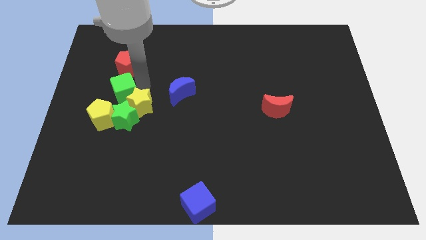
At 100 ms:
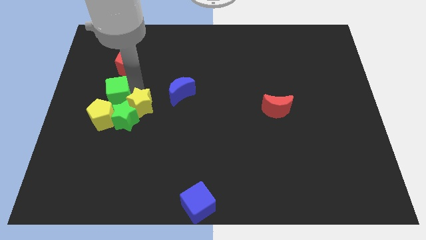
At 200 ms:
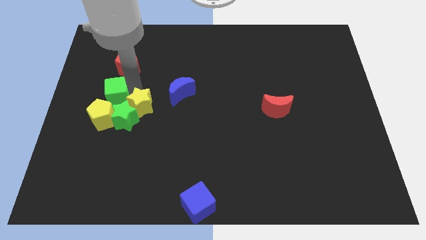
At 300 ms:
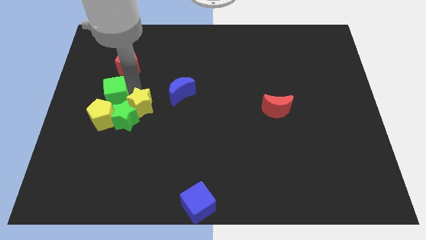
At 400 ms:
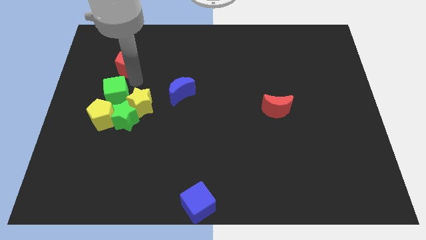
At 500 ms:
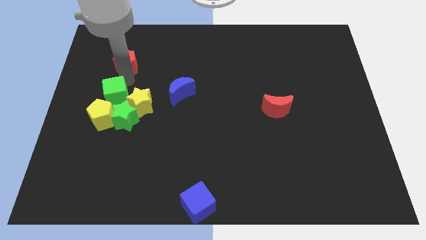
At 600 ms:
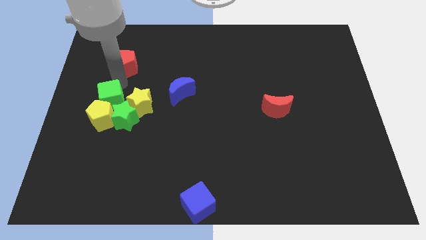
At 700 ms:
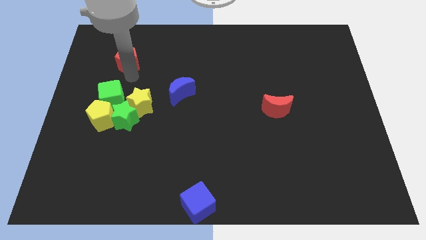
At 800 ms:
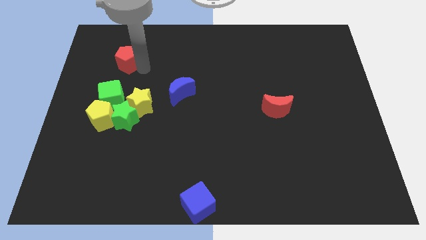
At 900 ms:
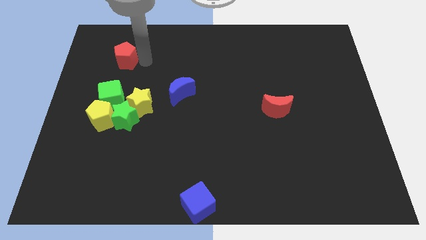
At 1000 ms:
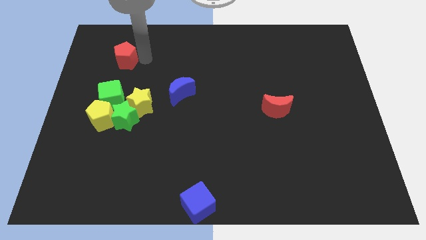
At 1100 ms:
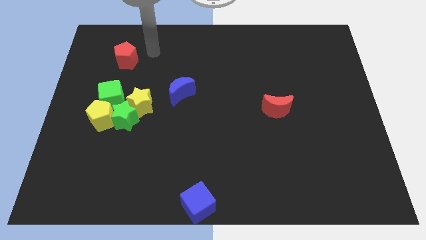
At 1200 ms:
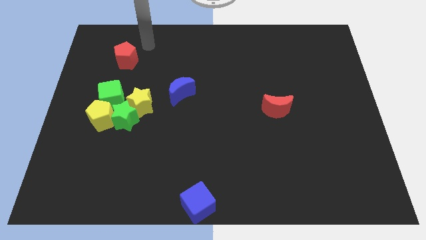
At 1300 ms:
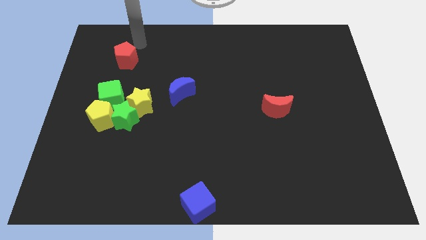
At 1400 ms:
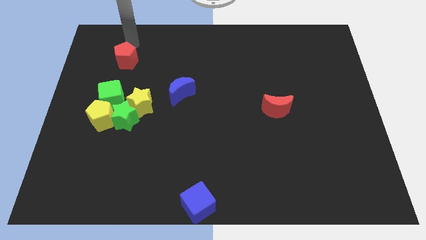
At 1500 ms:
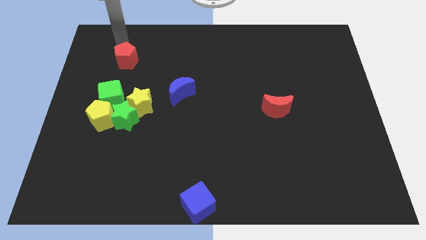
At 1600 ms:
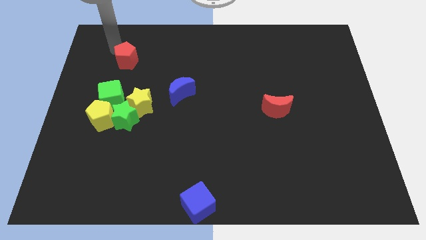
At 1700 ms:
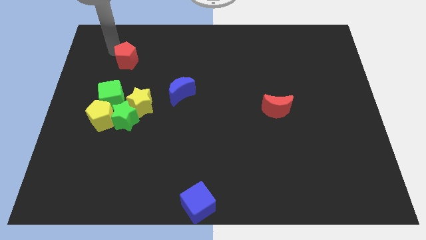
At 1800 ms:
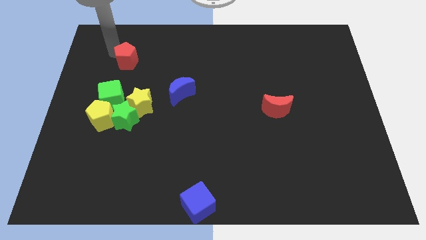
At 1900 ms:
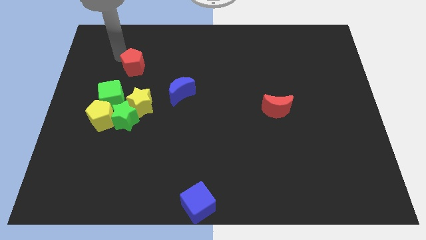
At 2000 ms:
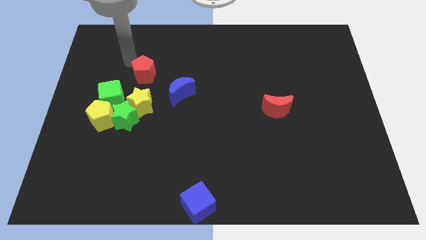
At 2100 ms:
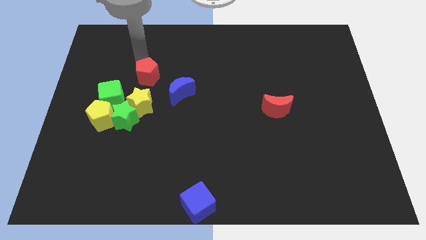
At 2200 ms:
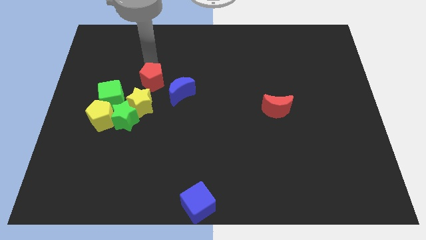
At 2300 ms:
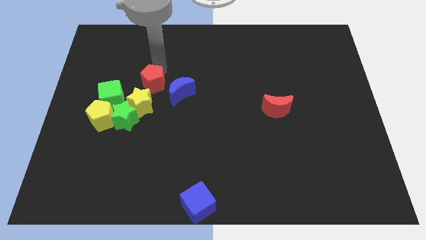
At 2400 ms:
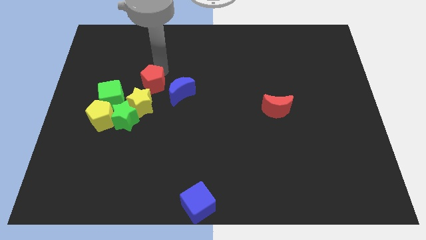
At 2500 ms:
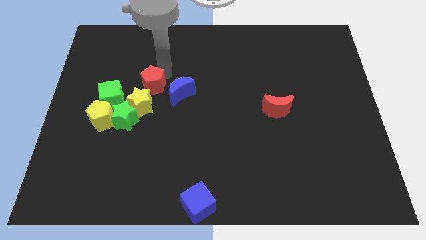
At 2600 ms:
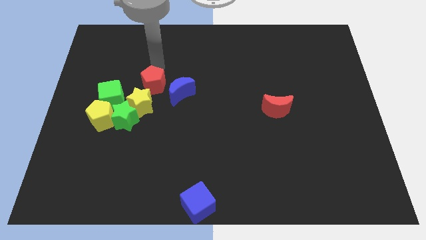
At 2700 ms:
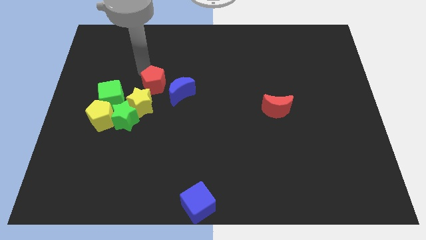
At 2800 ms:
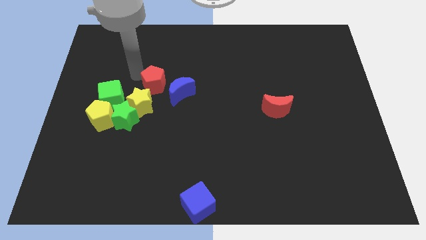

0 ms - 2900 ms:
move the red pentagon and green star towards the group of blocks

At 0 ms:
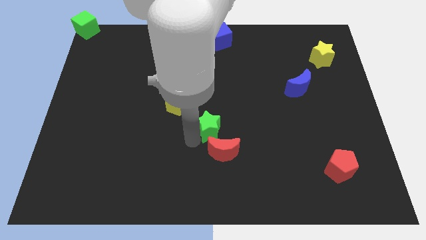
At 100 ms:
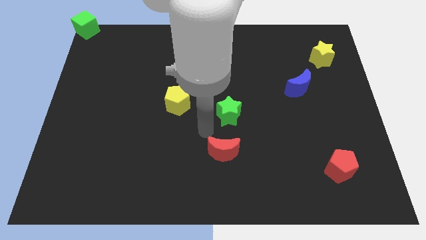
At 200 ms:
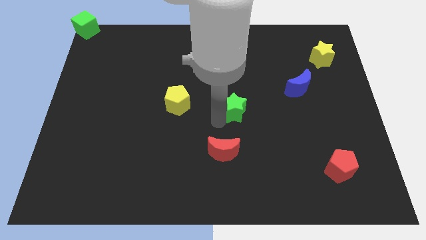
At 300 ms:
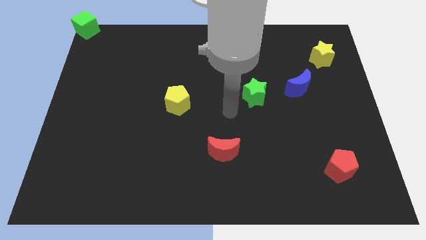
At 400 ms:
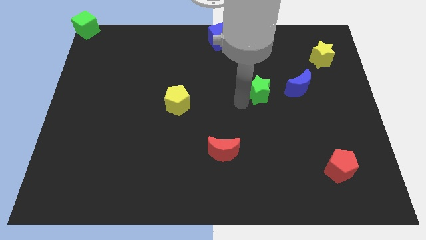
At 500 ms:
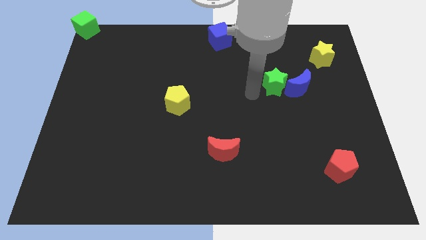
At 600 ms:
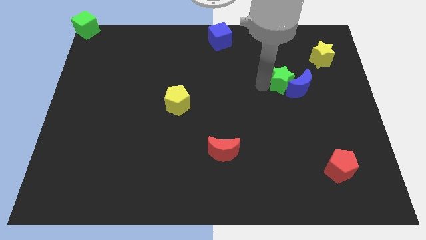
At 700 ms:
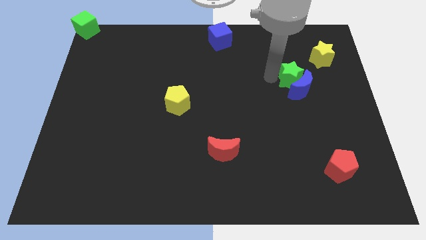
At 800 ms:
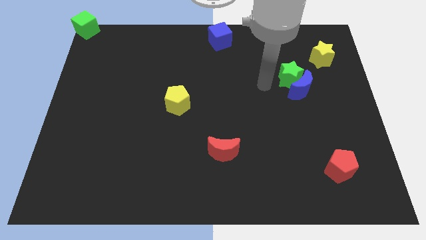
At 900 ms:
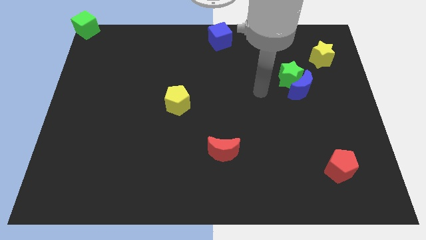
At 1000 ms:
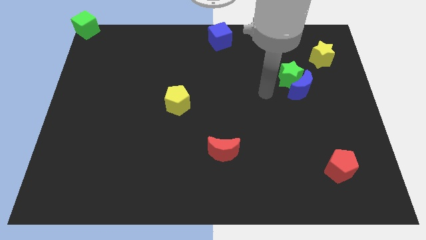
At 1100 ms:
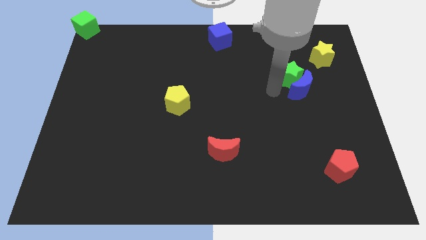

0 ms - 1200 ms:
push green star above blue crescent

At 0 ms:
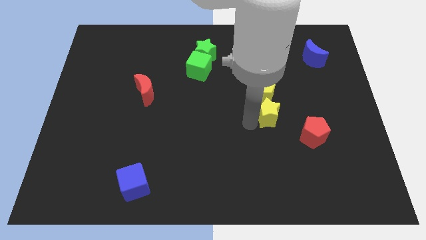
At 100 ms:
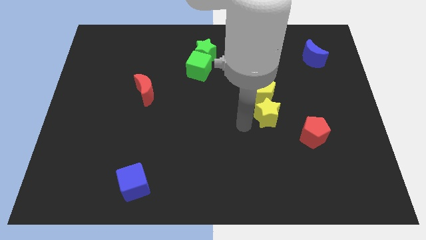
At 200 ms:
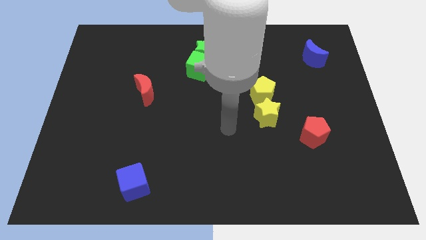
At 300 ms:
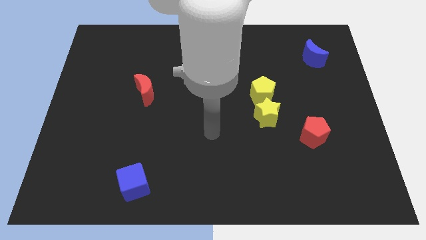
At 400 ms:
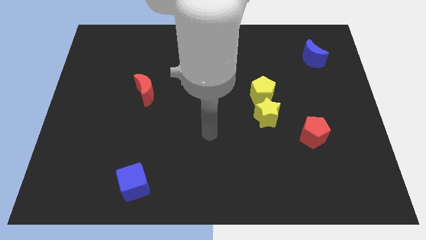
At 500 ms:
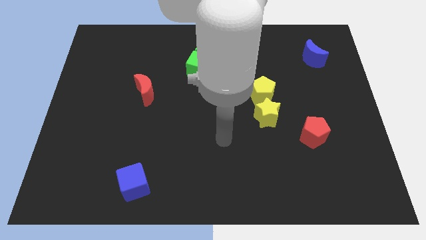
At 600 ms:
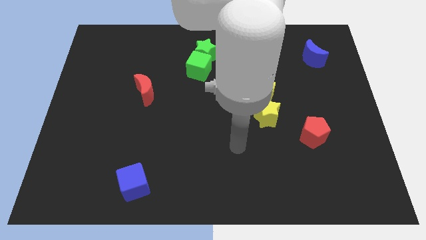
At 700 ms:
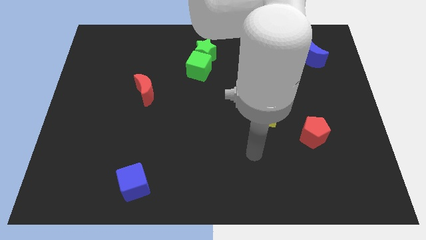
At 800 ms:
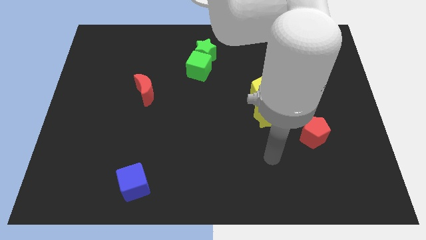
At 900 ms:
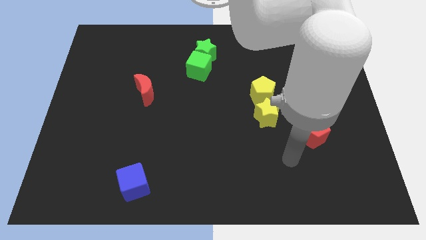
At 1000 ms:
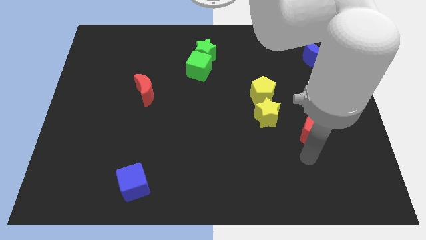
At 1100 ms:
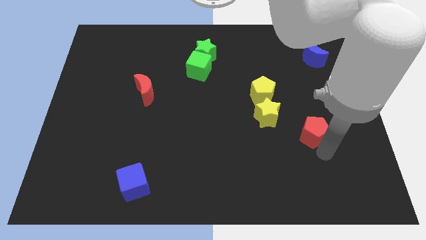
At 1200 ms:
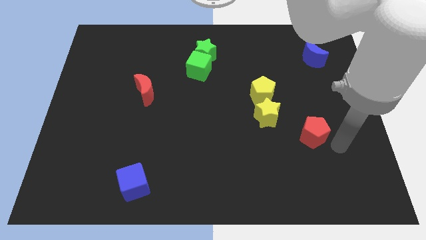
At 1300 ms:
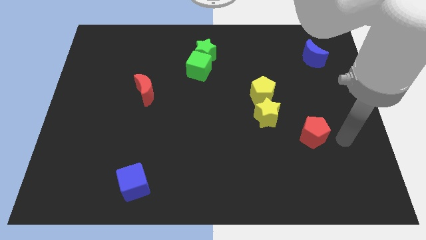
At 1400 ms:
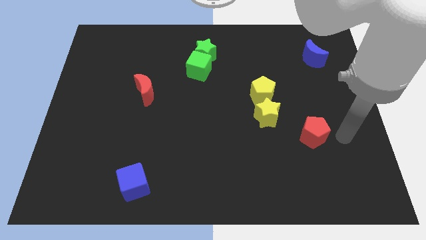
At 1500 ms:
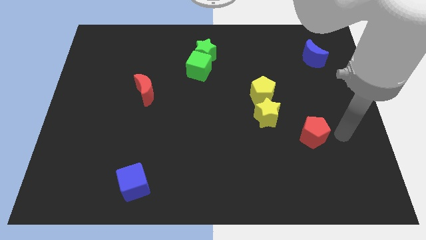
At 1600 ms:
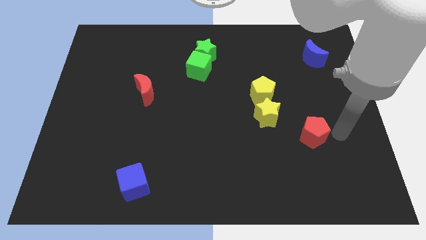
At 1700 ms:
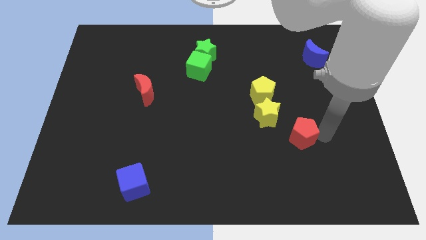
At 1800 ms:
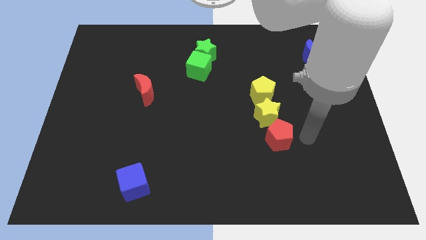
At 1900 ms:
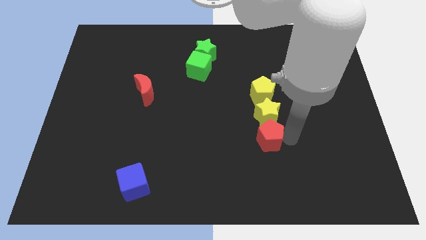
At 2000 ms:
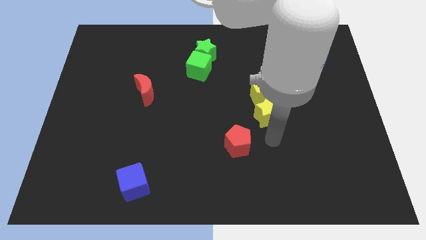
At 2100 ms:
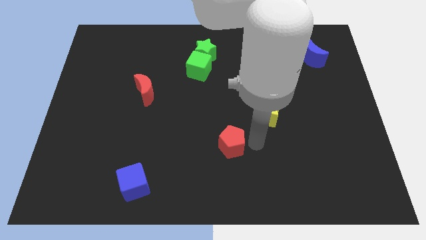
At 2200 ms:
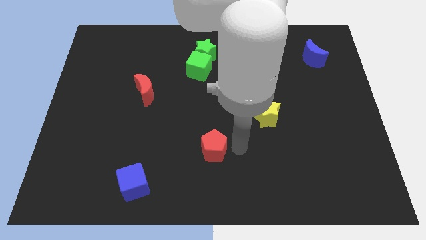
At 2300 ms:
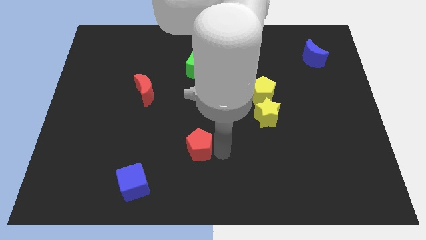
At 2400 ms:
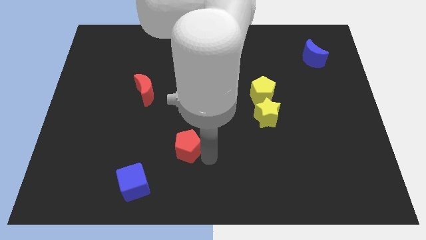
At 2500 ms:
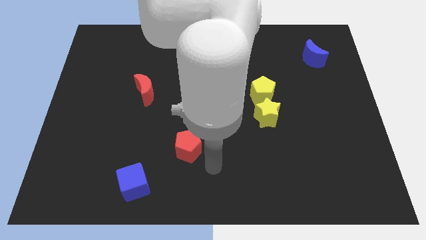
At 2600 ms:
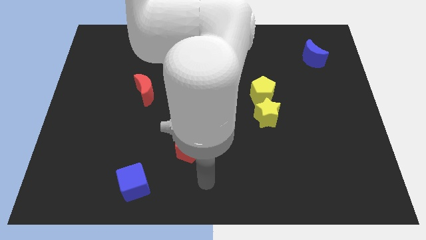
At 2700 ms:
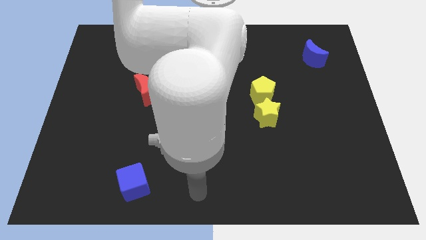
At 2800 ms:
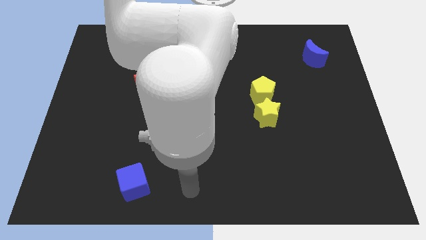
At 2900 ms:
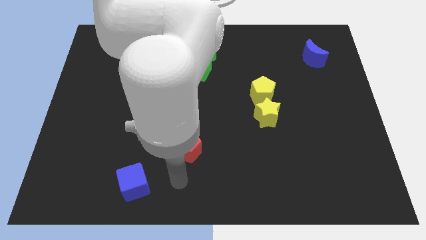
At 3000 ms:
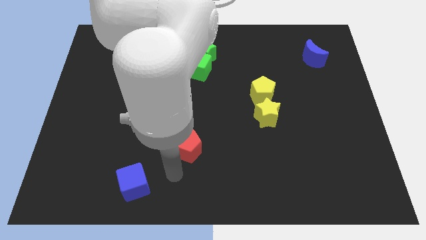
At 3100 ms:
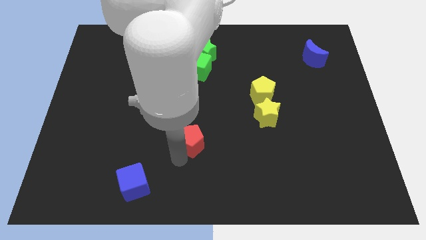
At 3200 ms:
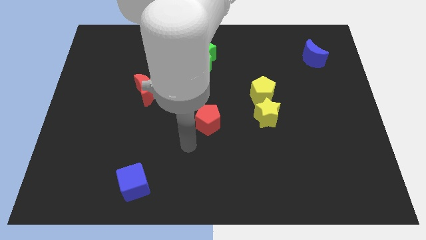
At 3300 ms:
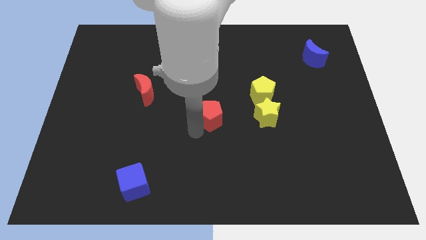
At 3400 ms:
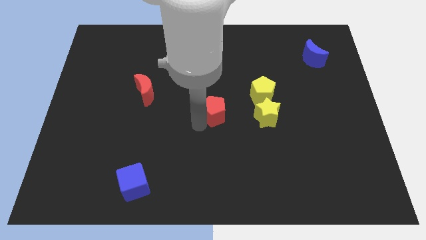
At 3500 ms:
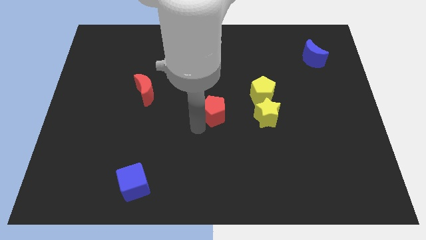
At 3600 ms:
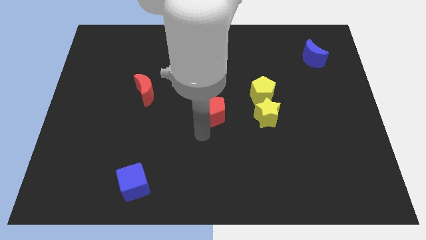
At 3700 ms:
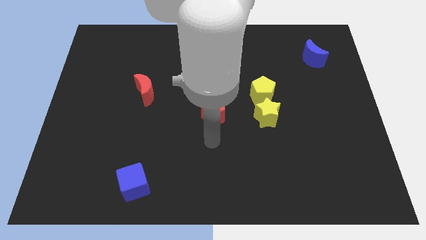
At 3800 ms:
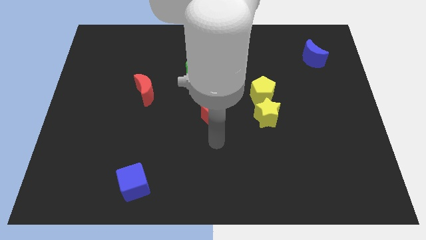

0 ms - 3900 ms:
move the red pentagon diagonal to the left of the yellow star

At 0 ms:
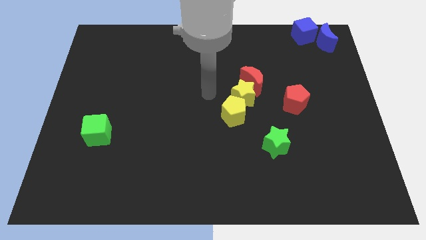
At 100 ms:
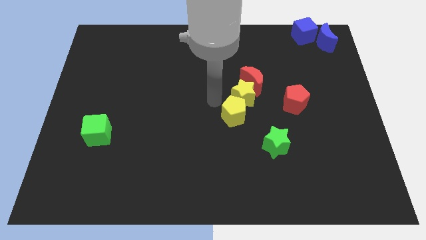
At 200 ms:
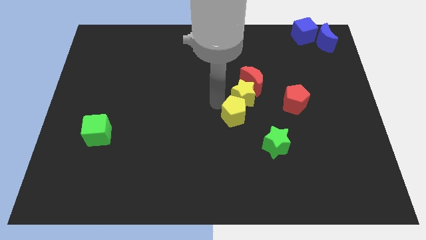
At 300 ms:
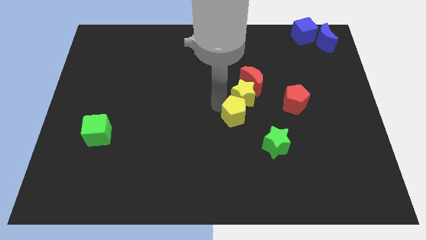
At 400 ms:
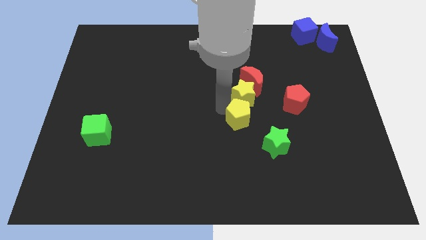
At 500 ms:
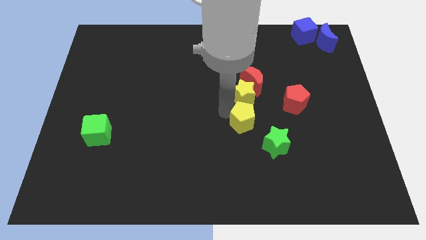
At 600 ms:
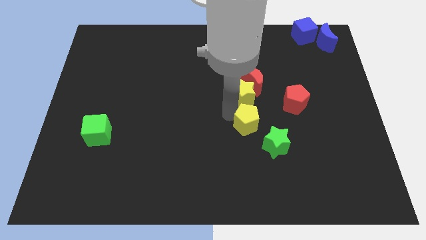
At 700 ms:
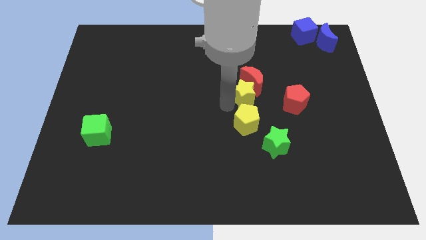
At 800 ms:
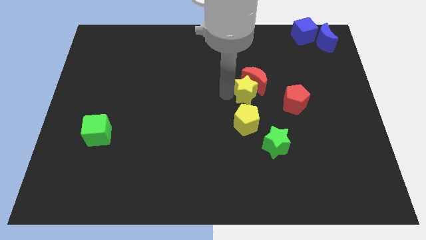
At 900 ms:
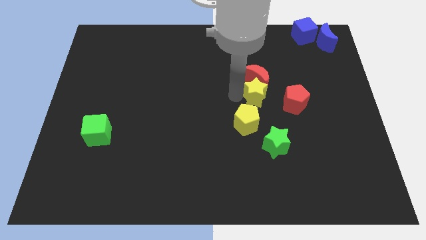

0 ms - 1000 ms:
separate the yellow pentagon and yellow star from each other
